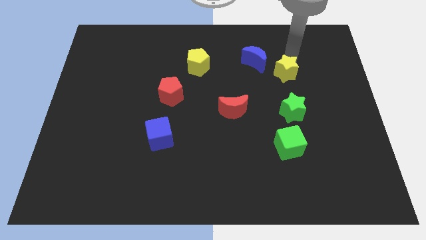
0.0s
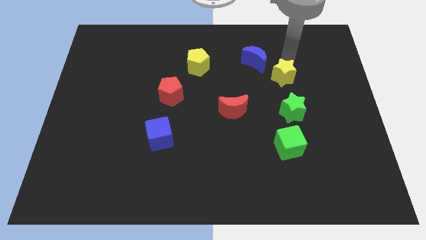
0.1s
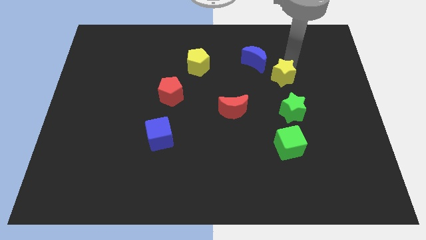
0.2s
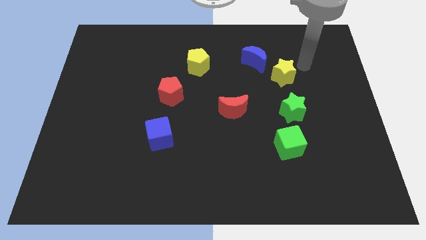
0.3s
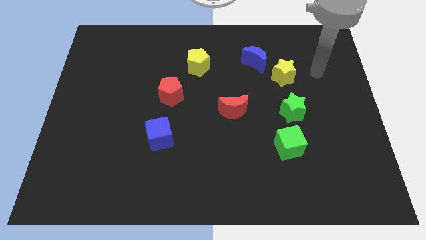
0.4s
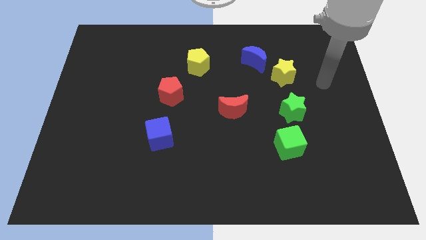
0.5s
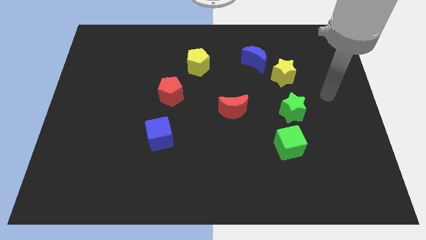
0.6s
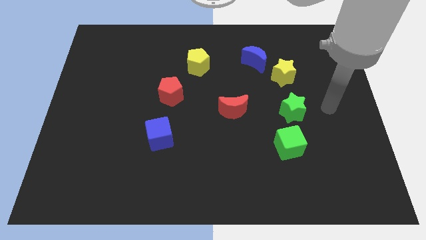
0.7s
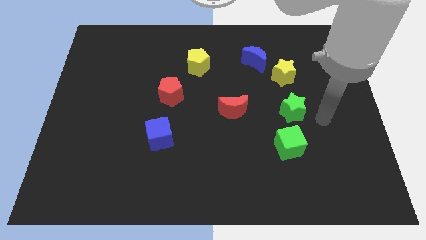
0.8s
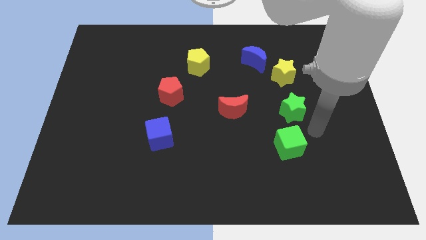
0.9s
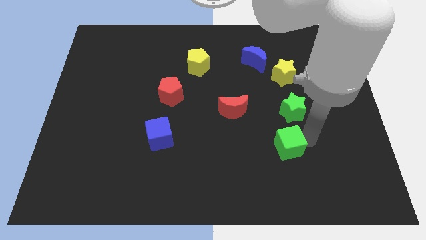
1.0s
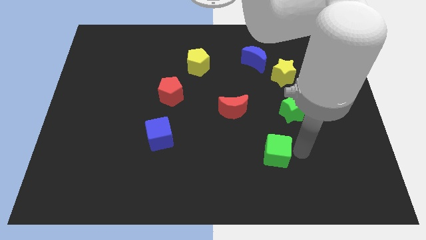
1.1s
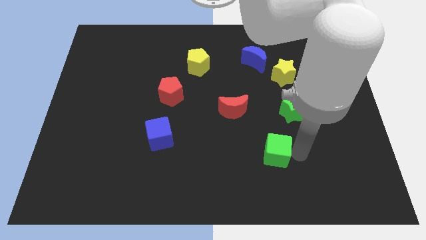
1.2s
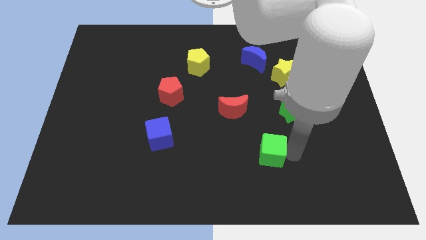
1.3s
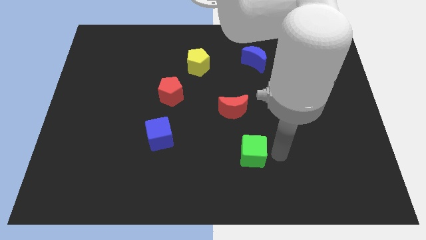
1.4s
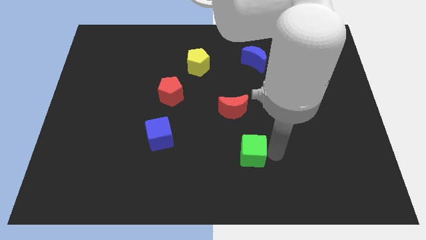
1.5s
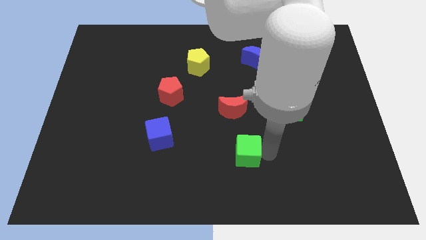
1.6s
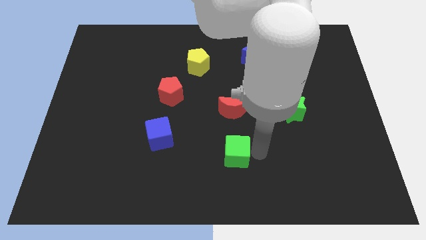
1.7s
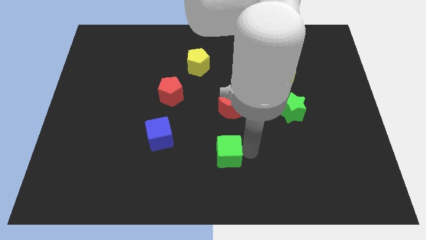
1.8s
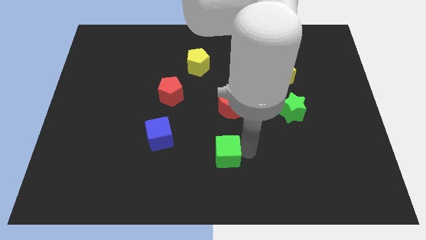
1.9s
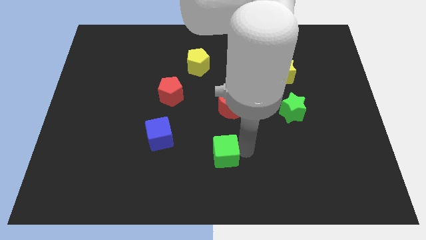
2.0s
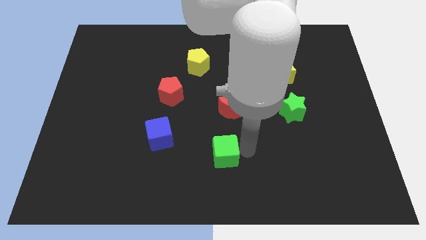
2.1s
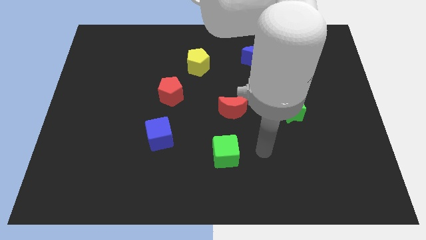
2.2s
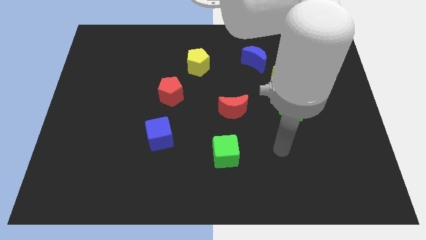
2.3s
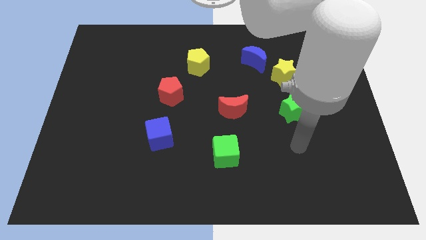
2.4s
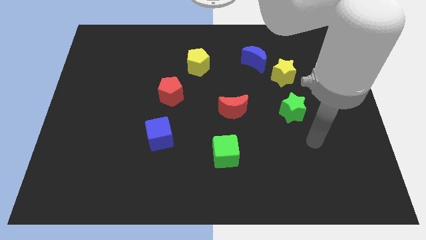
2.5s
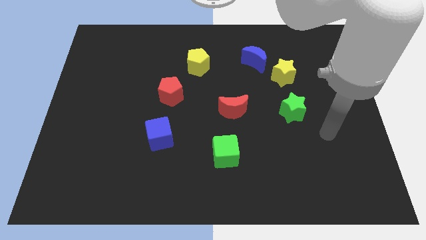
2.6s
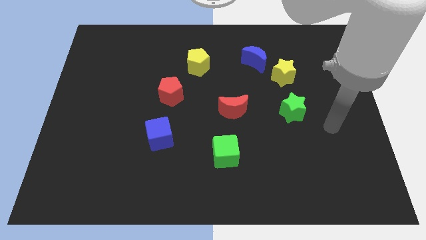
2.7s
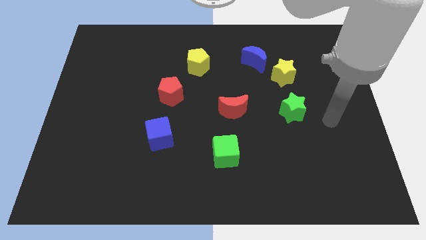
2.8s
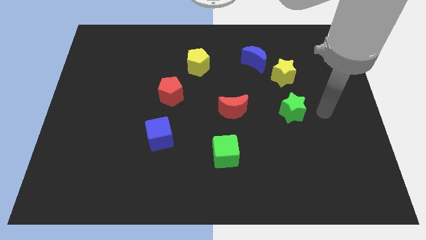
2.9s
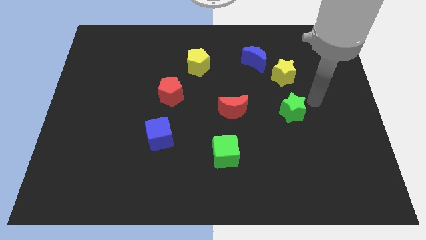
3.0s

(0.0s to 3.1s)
push the green cube towards the bottom center

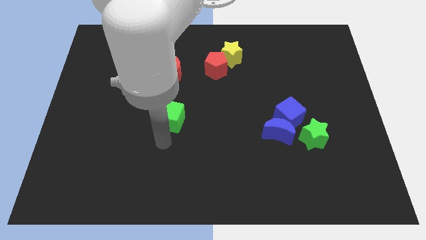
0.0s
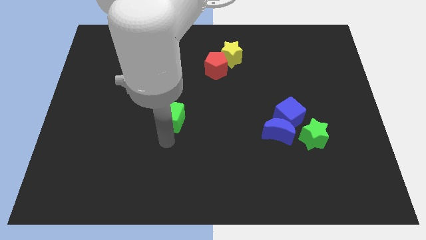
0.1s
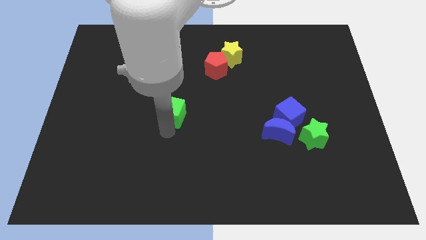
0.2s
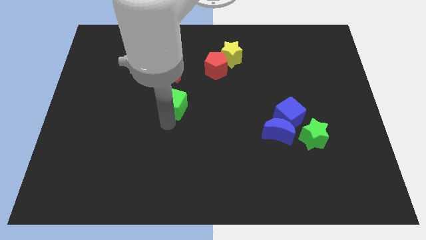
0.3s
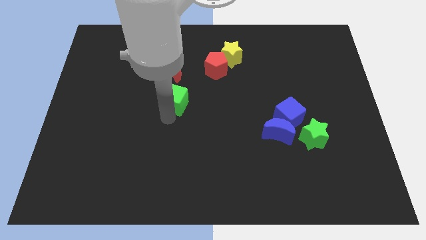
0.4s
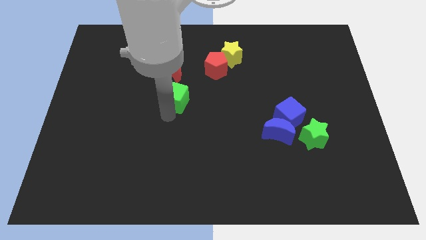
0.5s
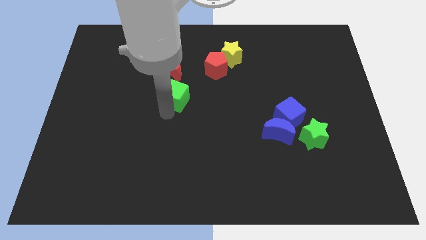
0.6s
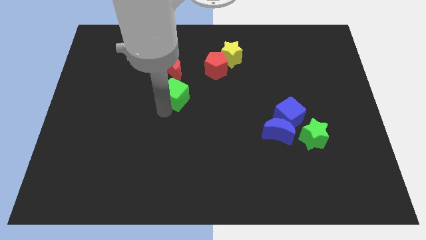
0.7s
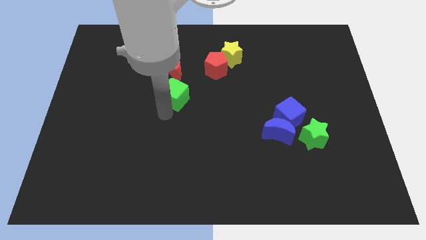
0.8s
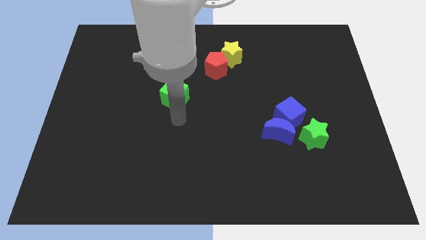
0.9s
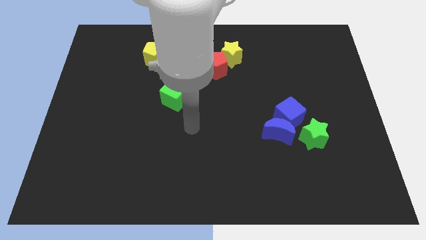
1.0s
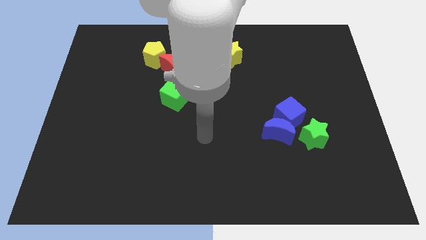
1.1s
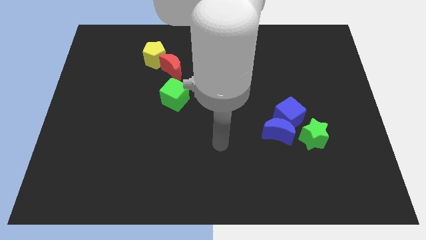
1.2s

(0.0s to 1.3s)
move the green cube at the bottom side of the red crescent

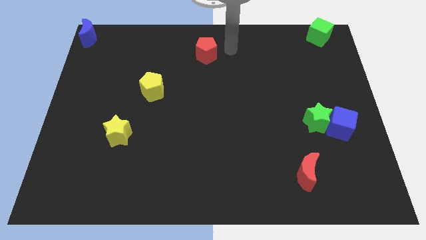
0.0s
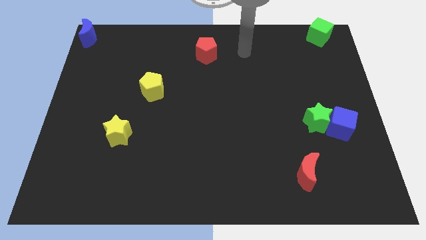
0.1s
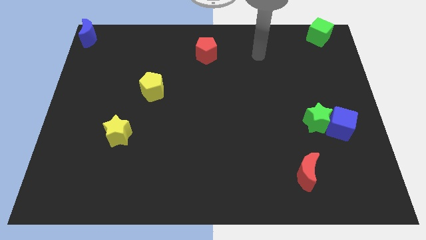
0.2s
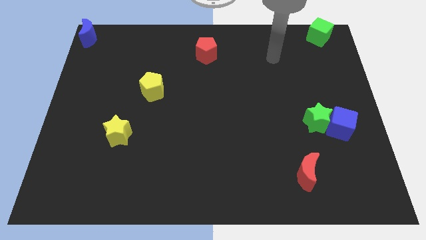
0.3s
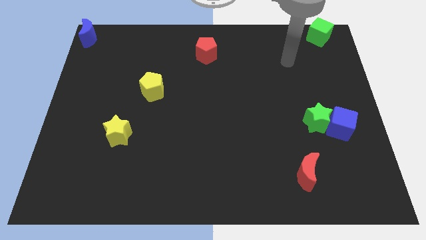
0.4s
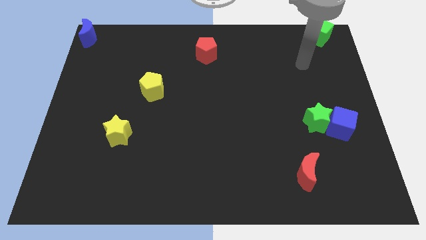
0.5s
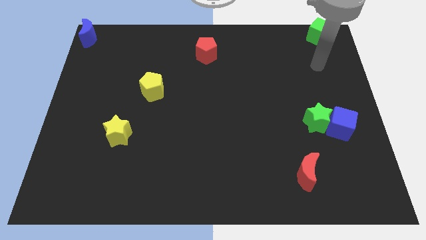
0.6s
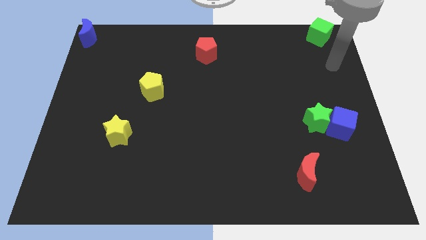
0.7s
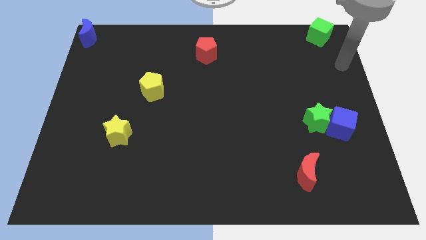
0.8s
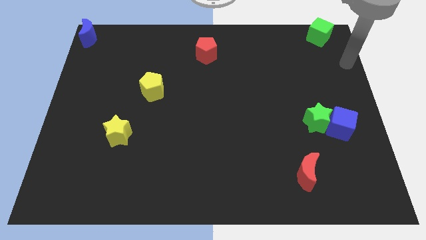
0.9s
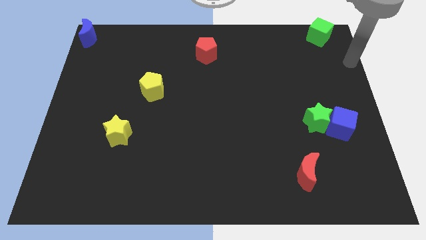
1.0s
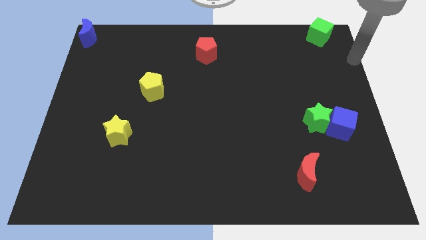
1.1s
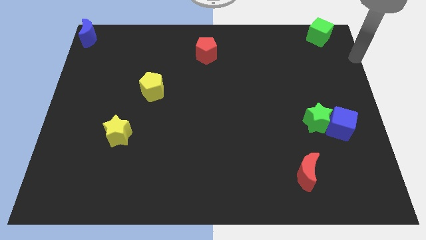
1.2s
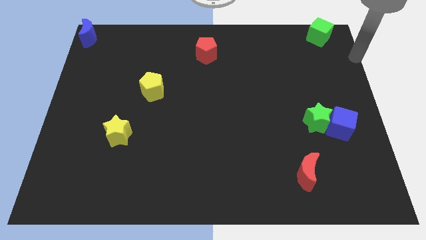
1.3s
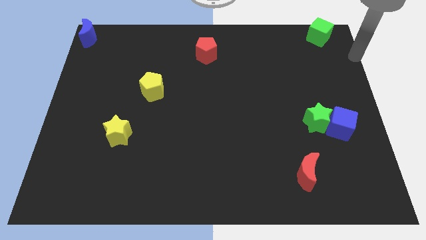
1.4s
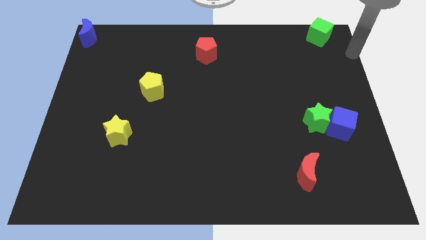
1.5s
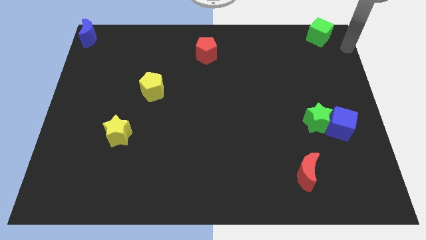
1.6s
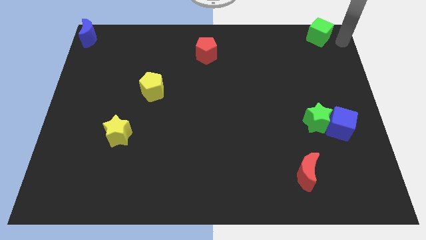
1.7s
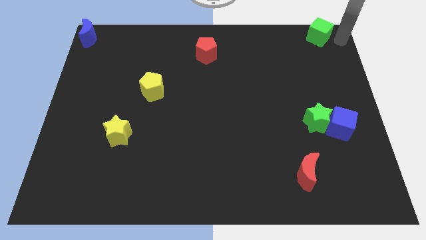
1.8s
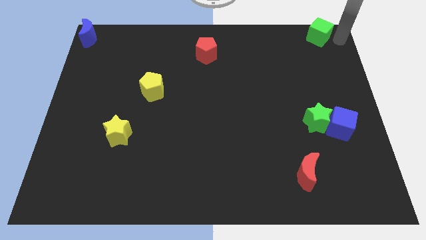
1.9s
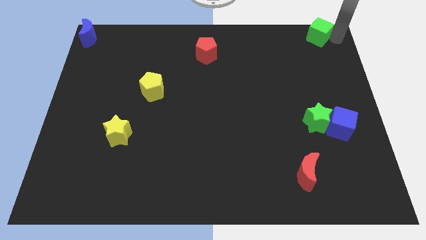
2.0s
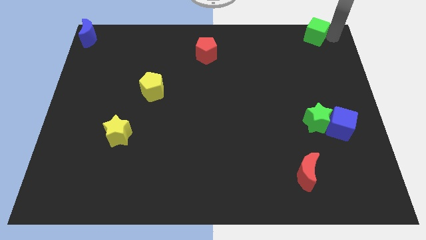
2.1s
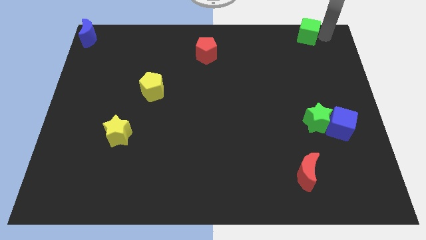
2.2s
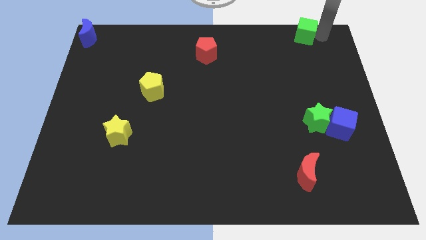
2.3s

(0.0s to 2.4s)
move the green cube slightly

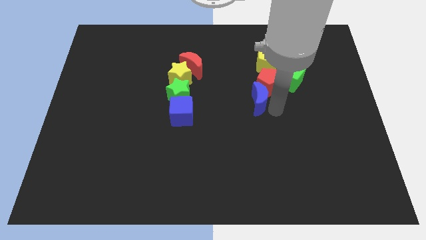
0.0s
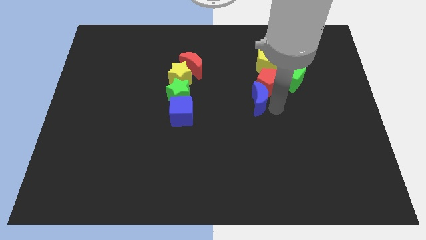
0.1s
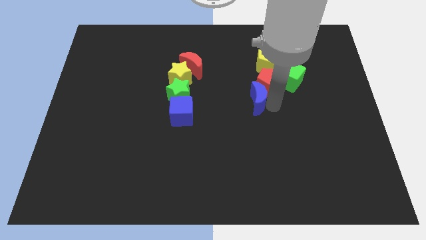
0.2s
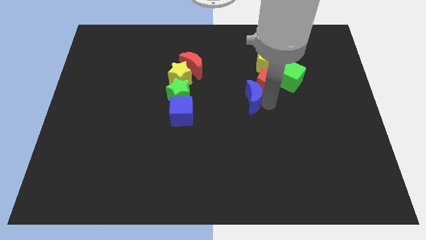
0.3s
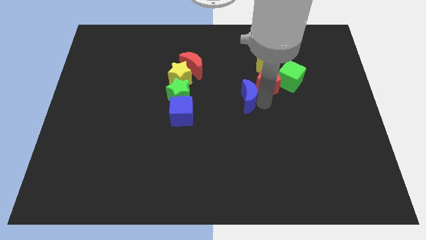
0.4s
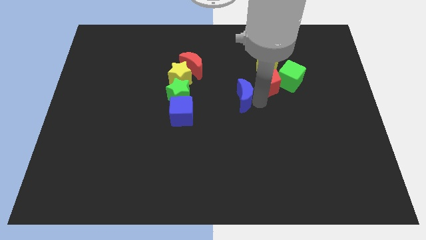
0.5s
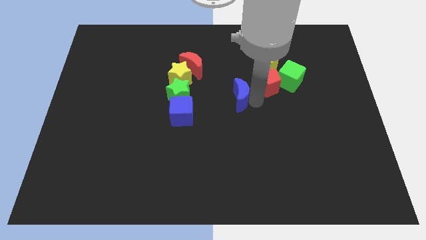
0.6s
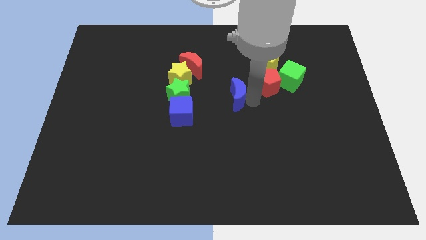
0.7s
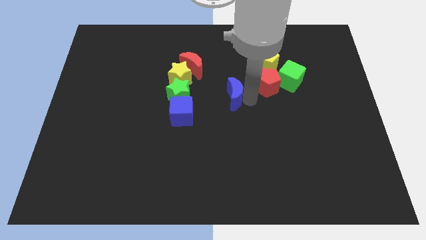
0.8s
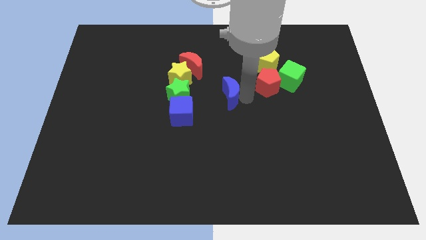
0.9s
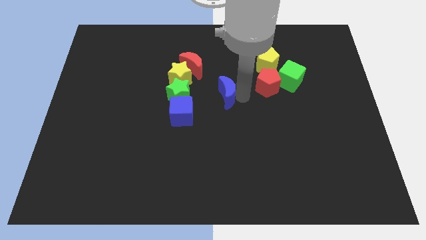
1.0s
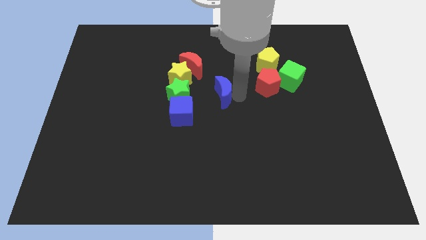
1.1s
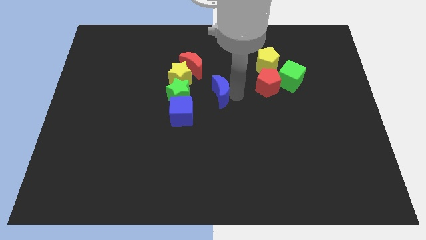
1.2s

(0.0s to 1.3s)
move the blue crescent to the right of the green star

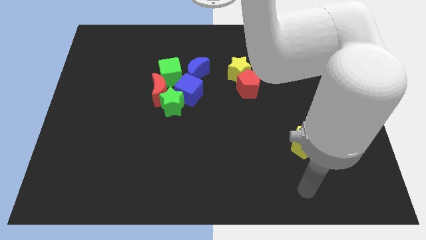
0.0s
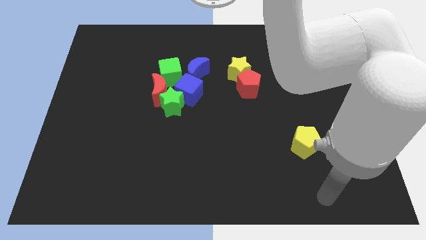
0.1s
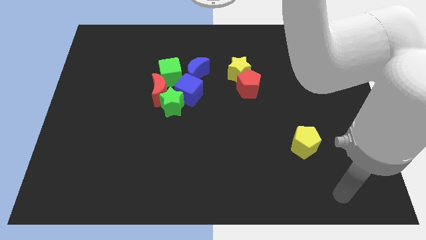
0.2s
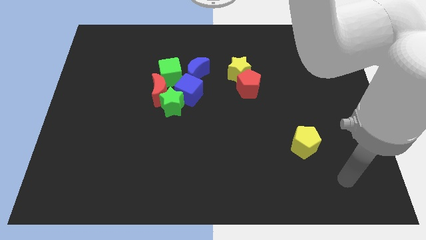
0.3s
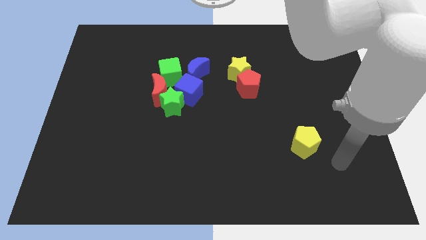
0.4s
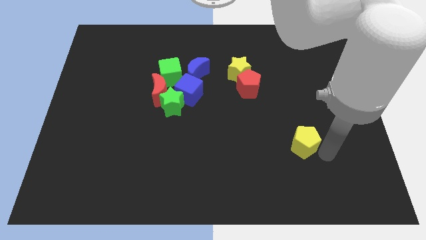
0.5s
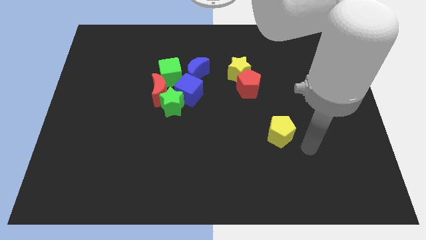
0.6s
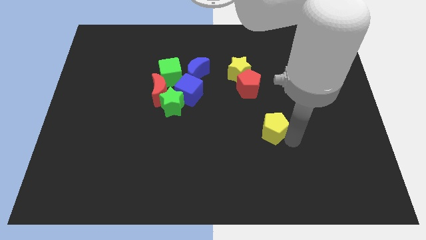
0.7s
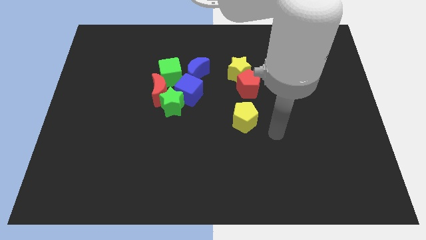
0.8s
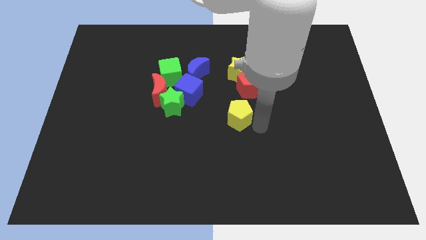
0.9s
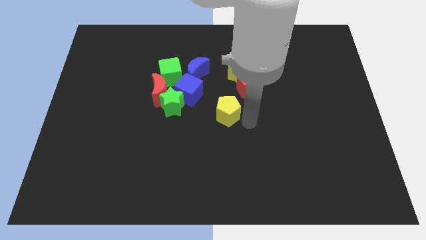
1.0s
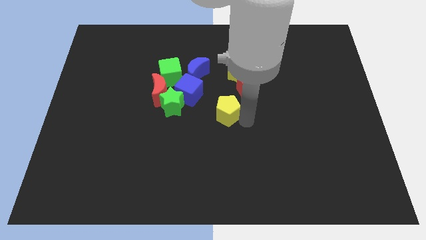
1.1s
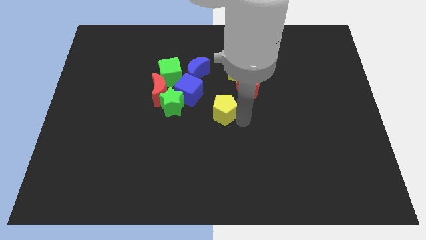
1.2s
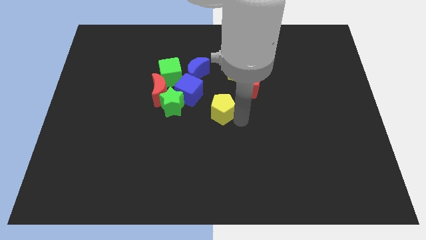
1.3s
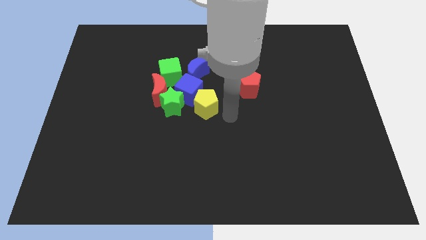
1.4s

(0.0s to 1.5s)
move the yellow pentagon to the right of the green star
